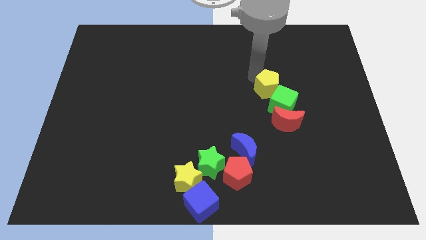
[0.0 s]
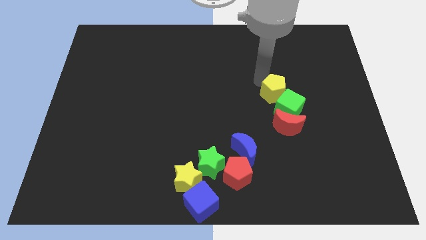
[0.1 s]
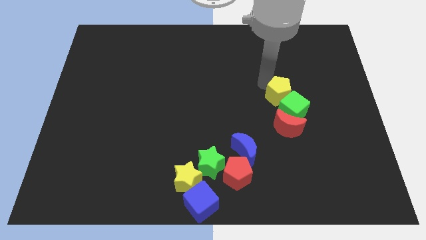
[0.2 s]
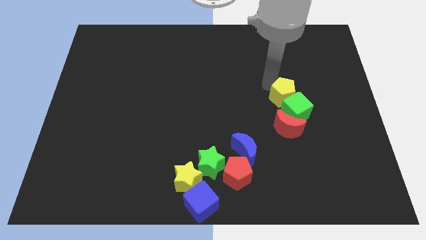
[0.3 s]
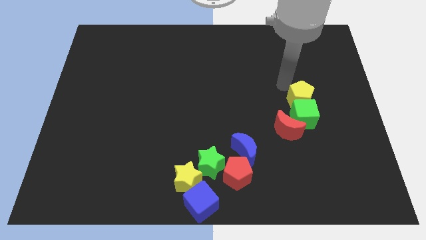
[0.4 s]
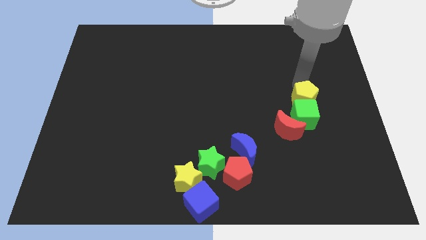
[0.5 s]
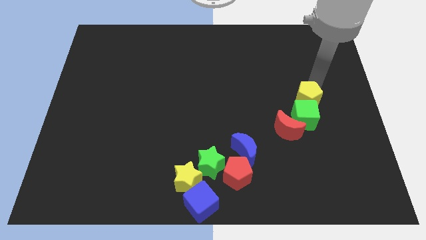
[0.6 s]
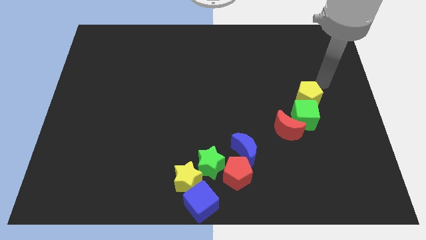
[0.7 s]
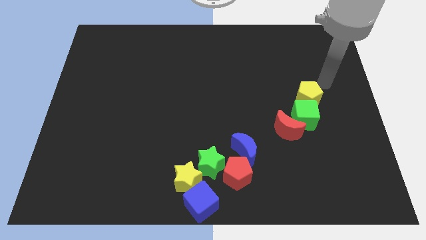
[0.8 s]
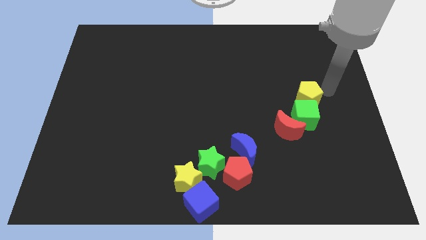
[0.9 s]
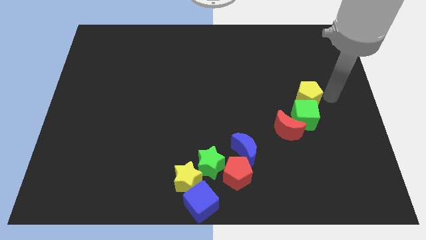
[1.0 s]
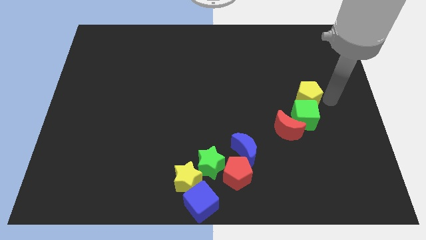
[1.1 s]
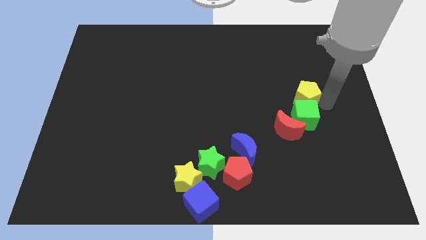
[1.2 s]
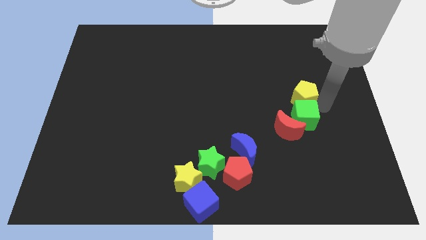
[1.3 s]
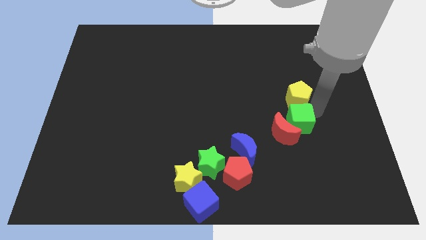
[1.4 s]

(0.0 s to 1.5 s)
push yellow pentagon in to green cube

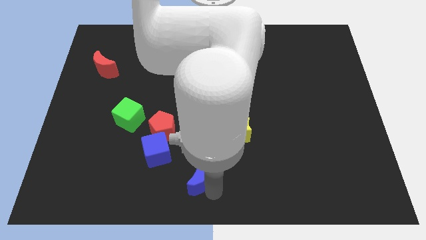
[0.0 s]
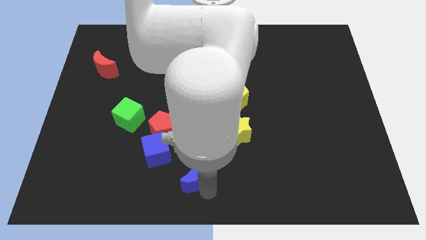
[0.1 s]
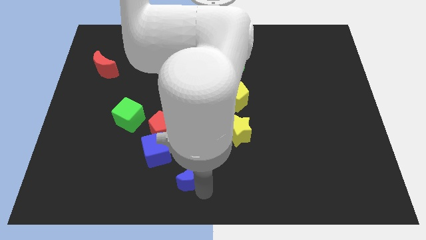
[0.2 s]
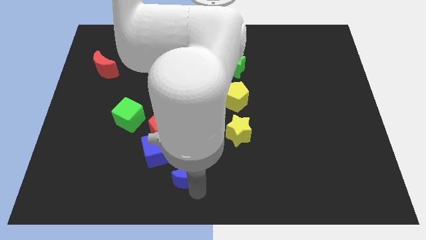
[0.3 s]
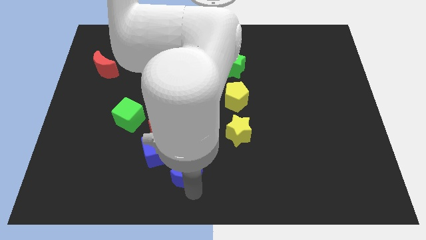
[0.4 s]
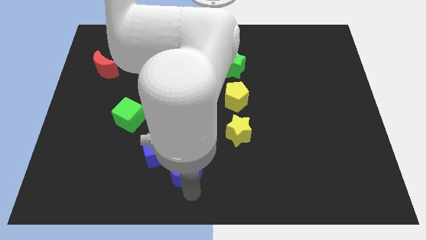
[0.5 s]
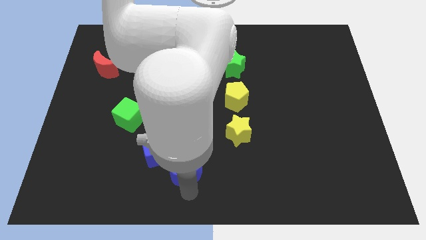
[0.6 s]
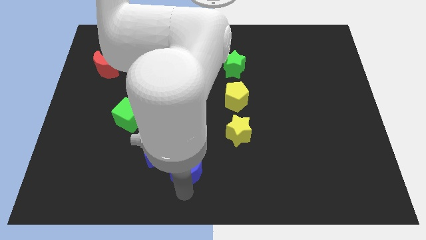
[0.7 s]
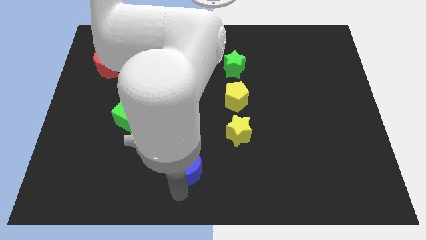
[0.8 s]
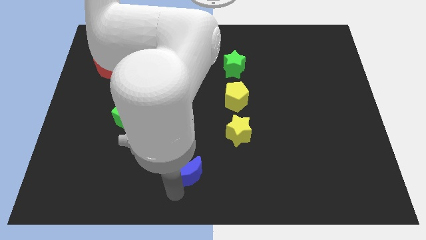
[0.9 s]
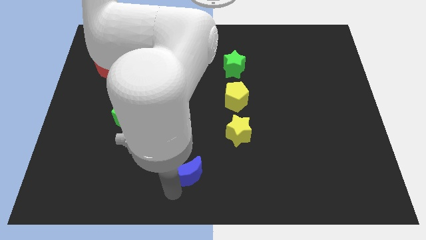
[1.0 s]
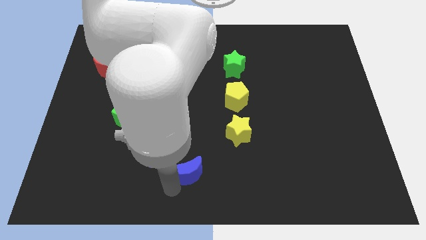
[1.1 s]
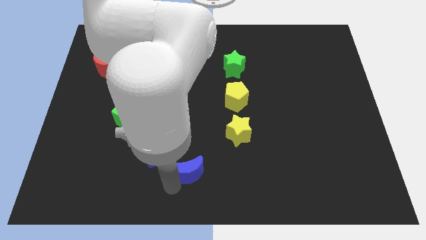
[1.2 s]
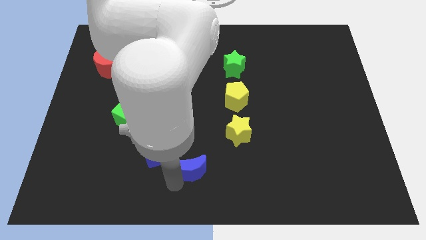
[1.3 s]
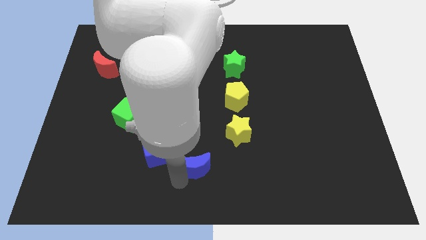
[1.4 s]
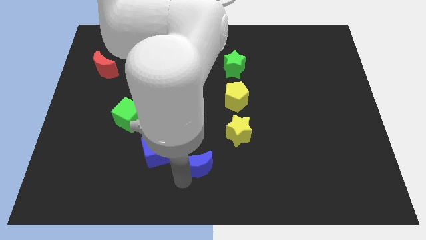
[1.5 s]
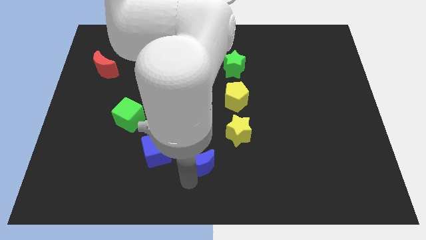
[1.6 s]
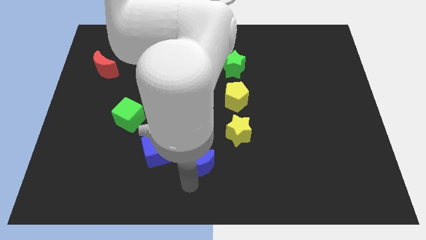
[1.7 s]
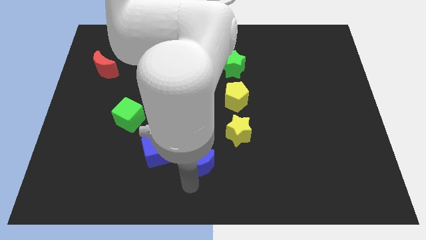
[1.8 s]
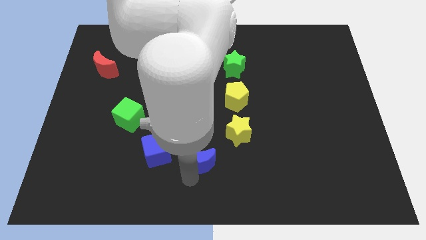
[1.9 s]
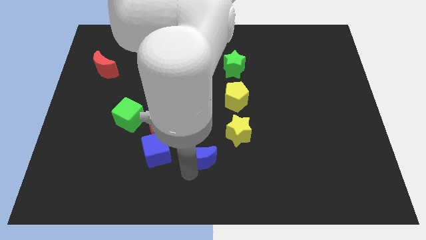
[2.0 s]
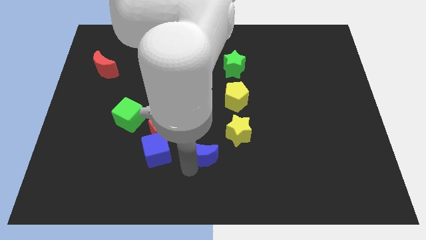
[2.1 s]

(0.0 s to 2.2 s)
push the blue moon to the right of blue cube

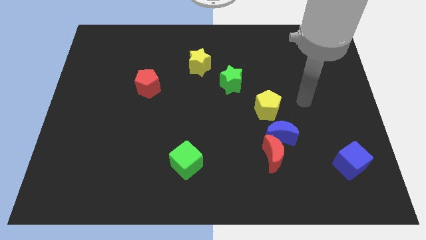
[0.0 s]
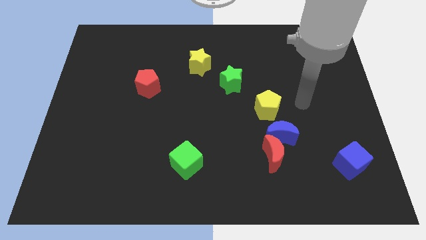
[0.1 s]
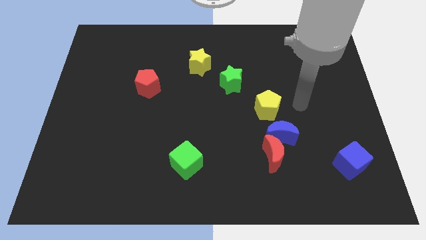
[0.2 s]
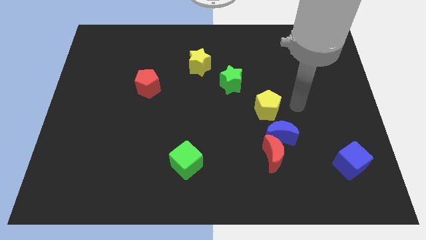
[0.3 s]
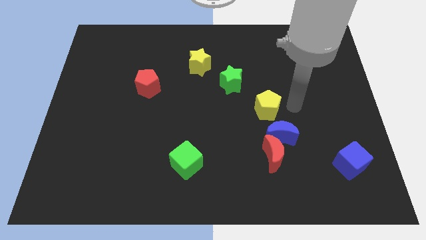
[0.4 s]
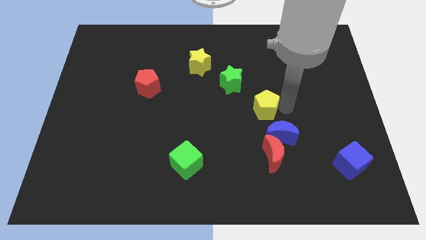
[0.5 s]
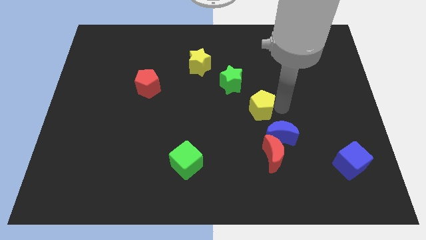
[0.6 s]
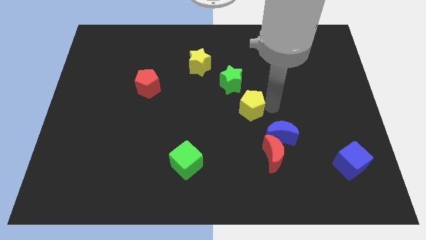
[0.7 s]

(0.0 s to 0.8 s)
tap yellow pentagon on right side

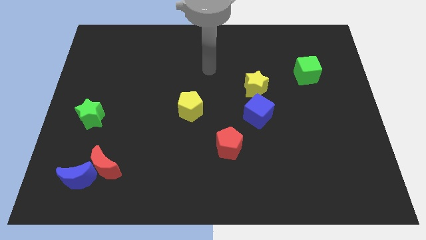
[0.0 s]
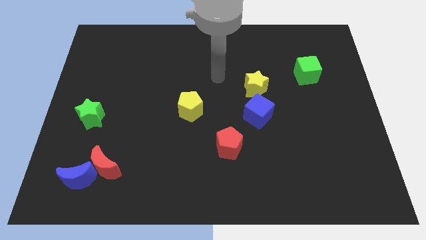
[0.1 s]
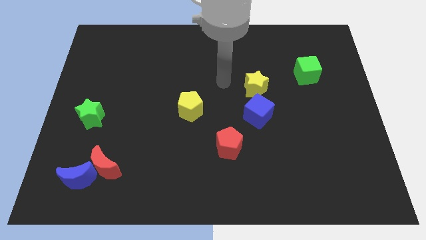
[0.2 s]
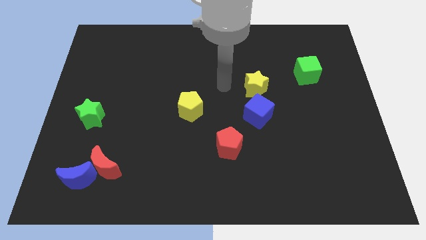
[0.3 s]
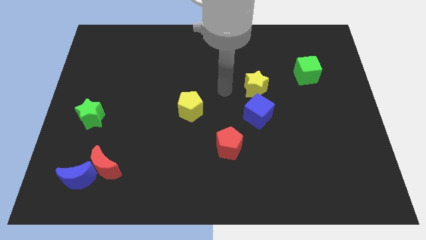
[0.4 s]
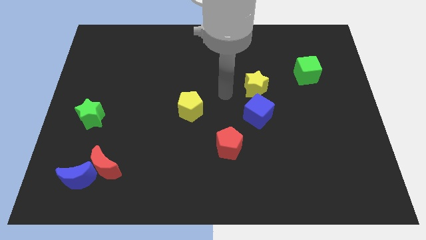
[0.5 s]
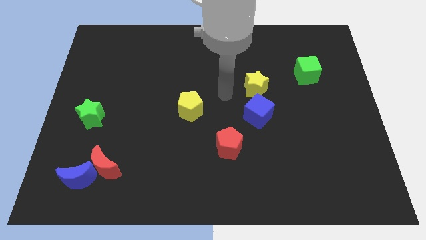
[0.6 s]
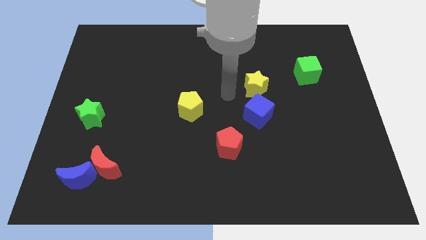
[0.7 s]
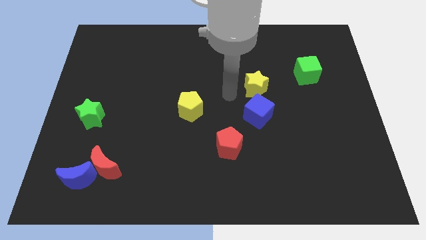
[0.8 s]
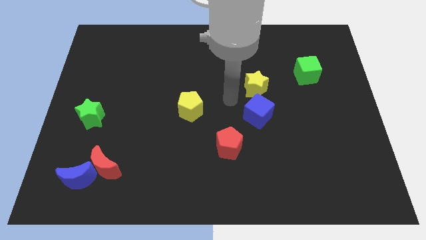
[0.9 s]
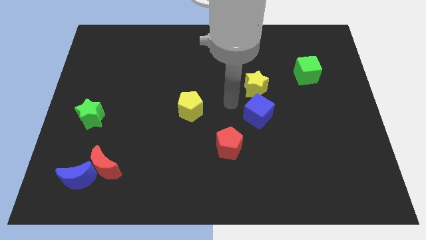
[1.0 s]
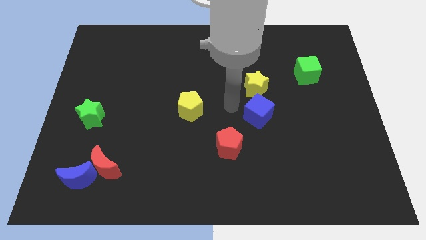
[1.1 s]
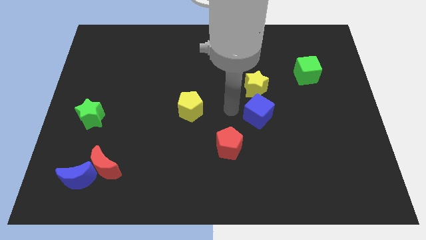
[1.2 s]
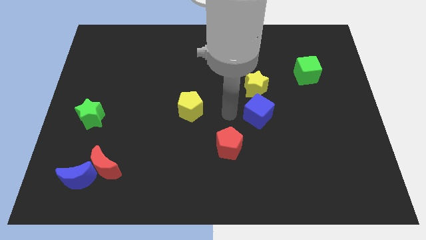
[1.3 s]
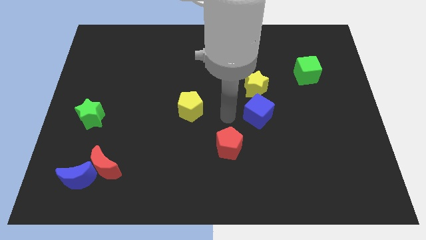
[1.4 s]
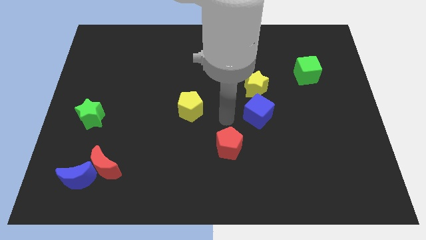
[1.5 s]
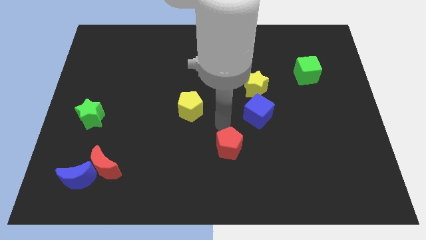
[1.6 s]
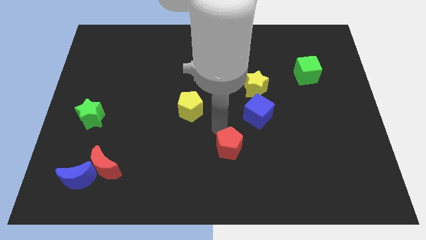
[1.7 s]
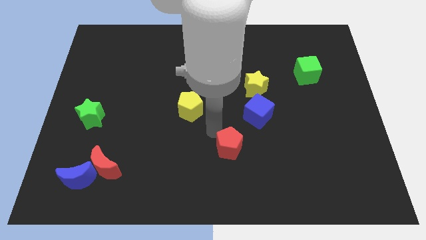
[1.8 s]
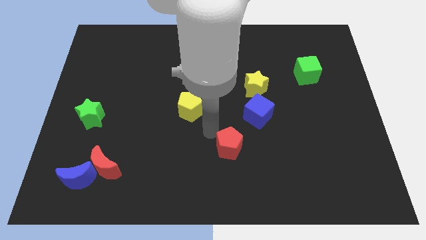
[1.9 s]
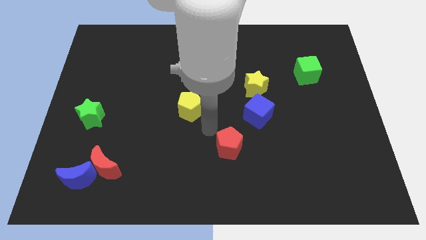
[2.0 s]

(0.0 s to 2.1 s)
place your hand in between the yellow pentagon and red pentagon

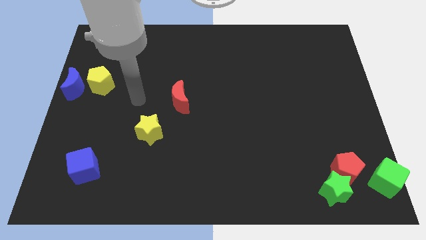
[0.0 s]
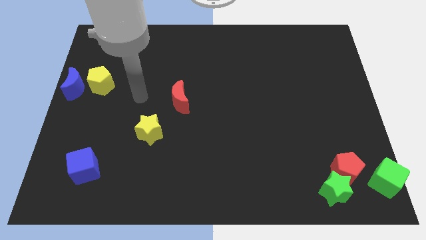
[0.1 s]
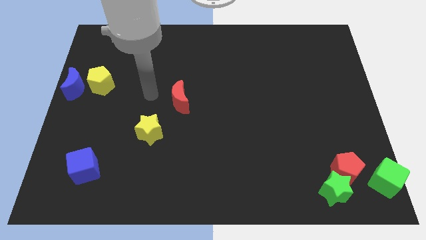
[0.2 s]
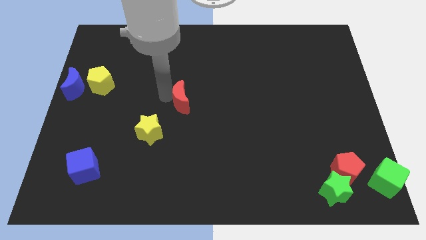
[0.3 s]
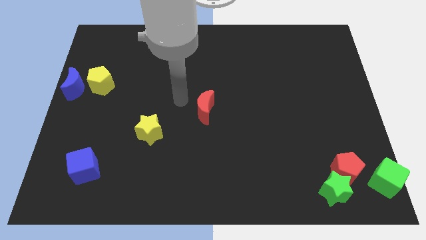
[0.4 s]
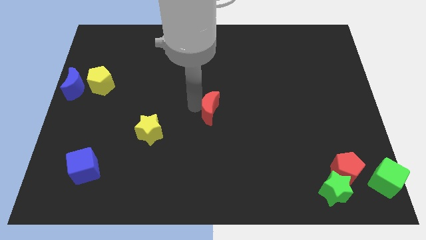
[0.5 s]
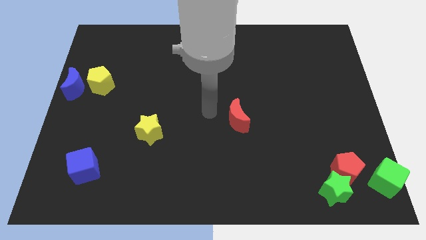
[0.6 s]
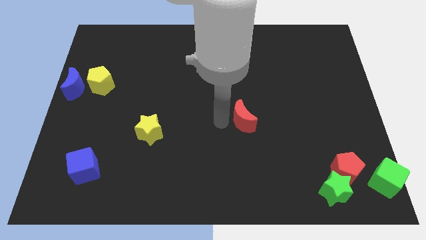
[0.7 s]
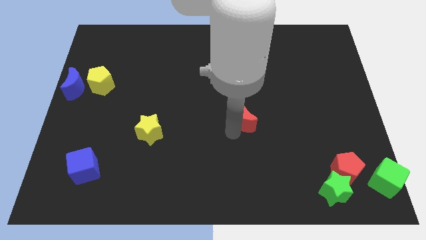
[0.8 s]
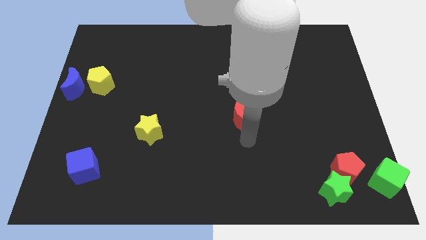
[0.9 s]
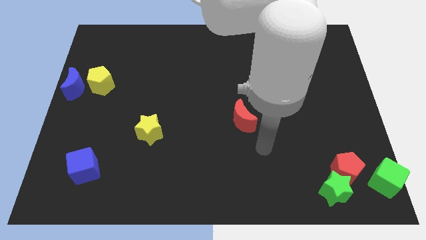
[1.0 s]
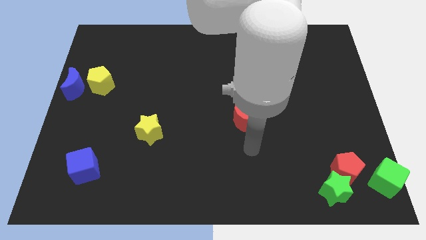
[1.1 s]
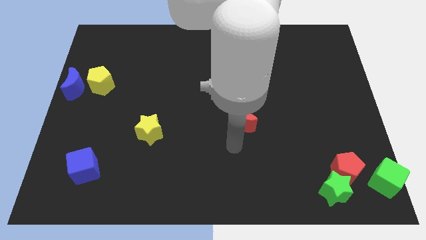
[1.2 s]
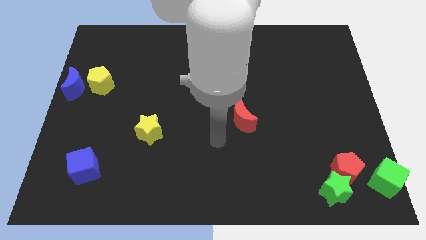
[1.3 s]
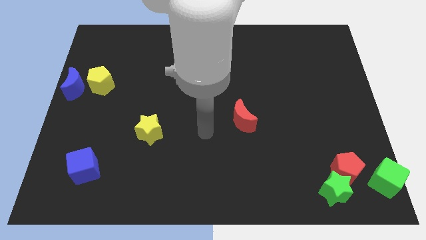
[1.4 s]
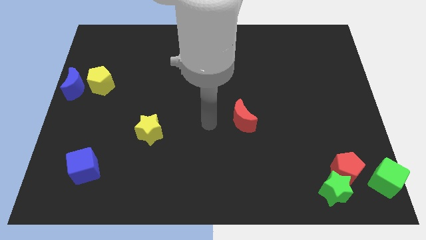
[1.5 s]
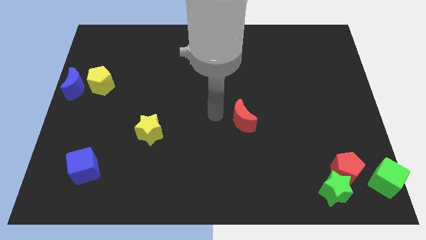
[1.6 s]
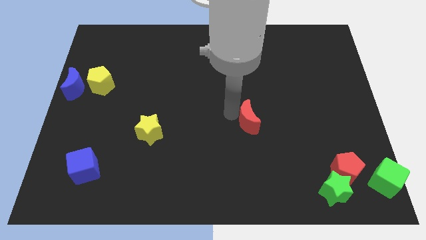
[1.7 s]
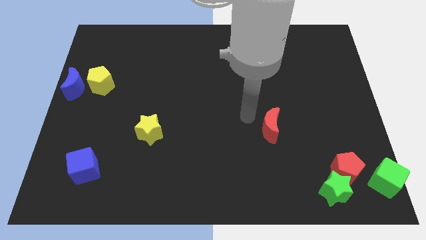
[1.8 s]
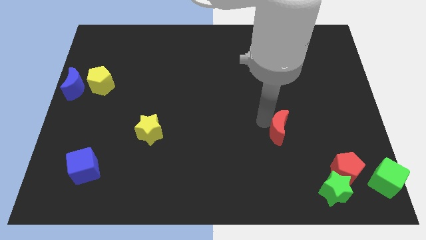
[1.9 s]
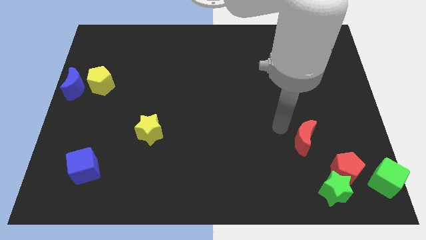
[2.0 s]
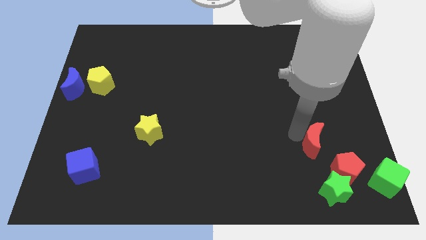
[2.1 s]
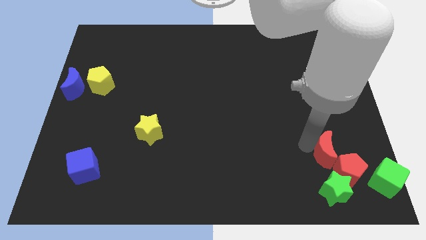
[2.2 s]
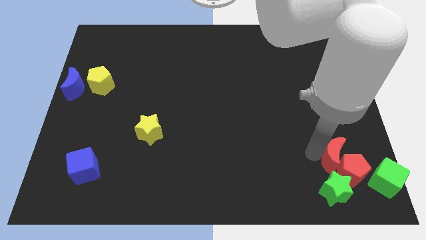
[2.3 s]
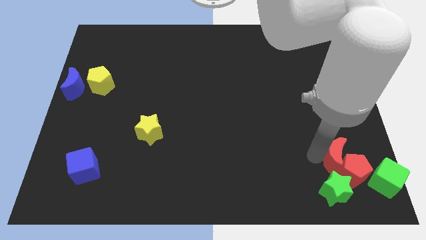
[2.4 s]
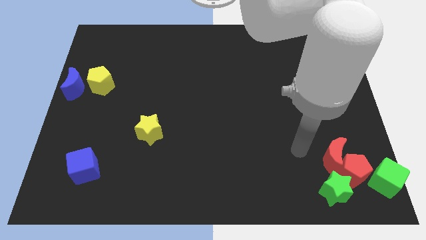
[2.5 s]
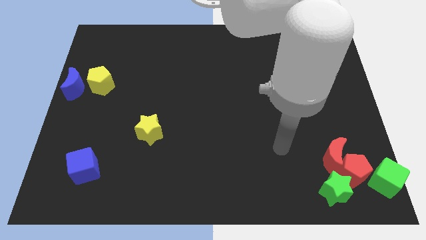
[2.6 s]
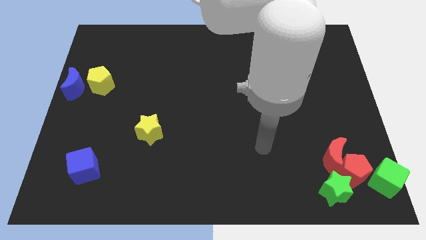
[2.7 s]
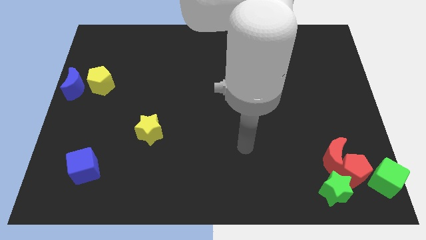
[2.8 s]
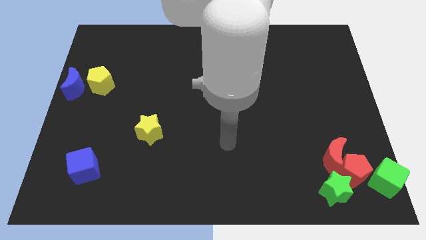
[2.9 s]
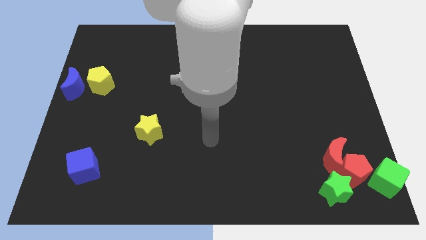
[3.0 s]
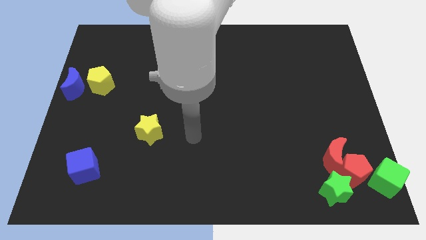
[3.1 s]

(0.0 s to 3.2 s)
push the red moon towards the right side of the board
